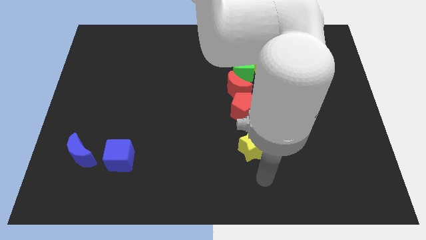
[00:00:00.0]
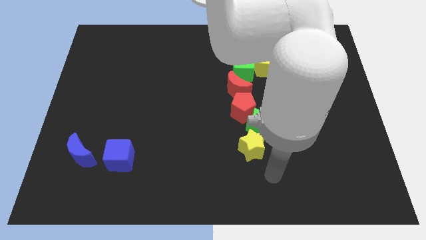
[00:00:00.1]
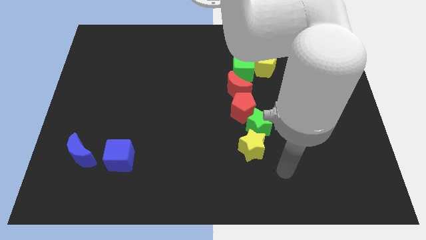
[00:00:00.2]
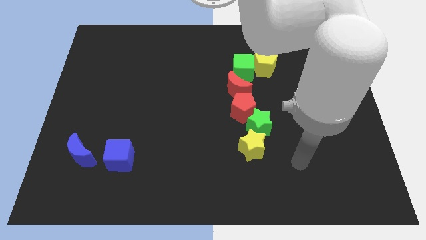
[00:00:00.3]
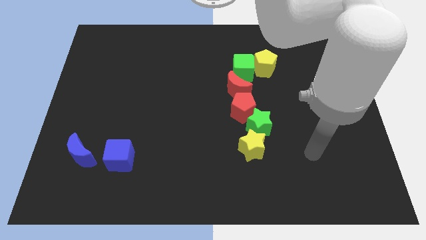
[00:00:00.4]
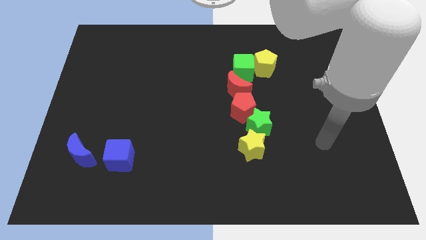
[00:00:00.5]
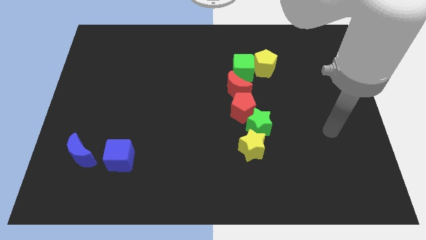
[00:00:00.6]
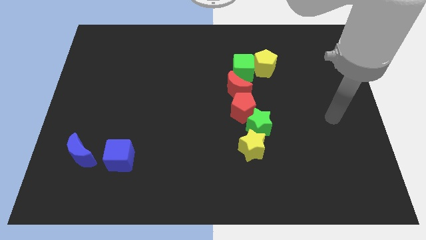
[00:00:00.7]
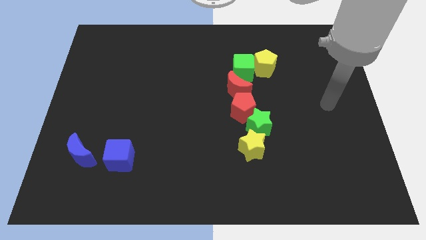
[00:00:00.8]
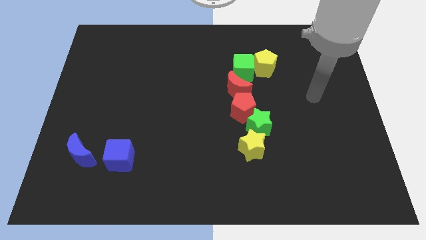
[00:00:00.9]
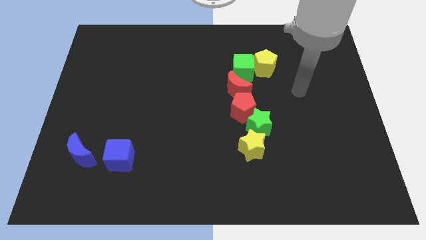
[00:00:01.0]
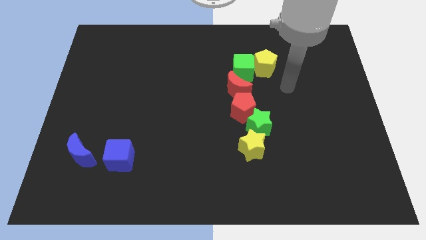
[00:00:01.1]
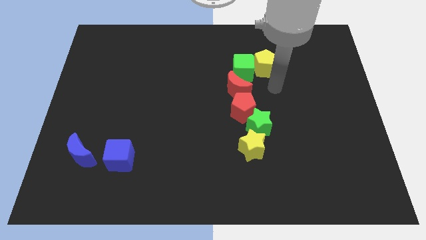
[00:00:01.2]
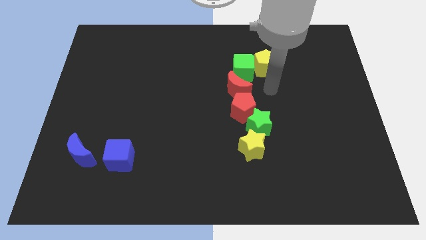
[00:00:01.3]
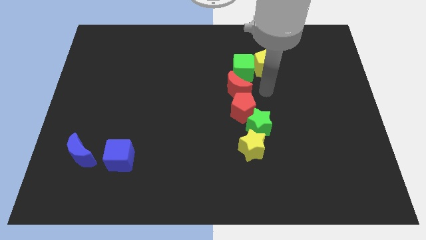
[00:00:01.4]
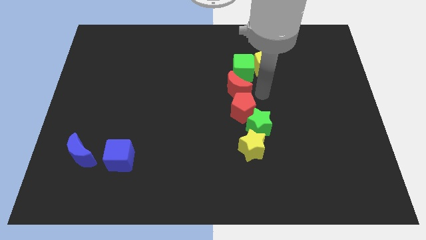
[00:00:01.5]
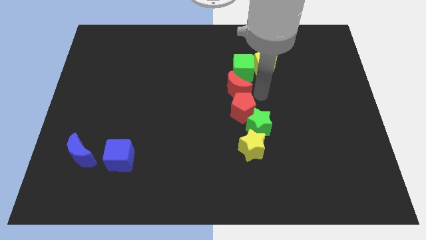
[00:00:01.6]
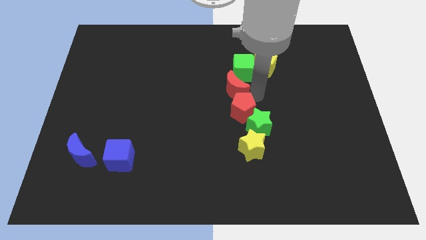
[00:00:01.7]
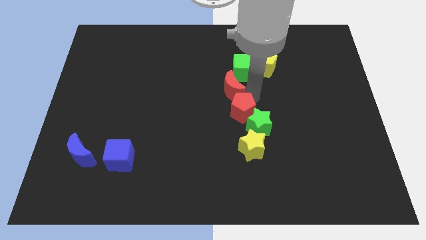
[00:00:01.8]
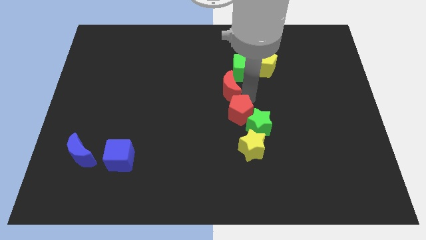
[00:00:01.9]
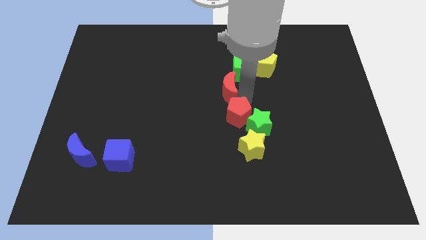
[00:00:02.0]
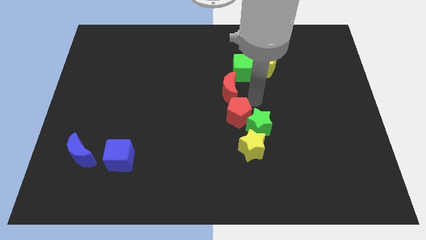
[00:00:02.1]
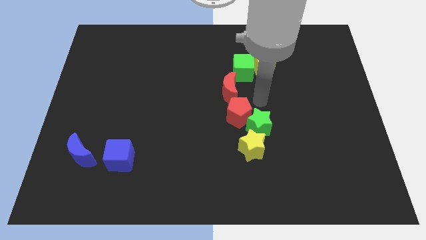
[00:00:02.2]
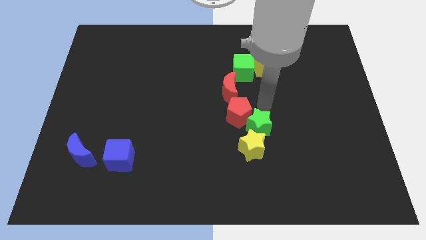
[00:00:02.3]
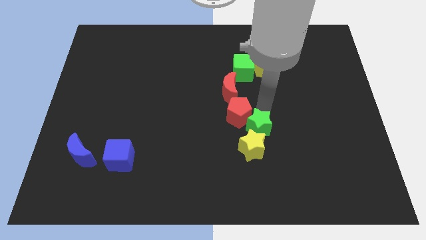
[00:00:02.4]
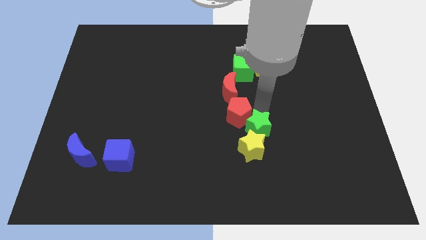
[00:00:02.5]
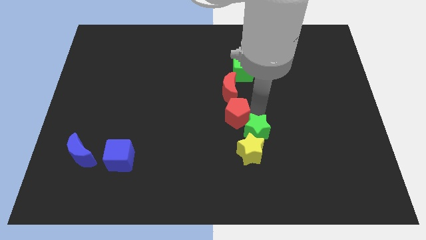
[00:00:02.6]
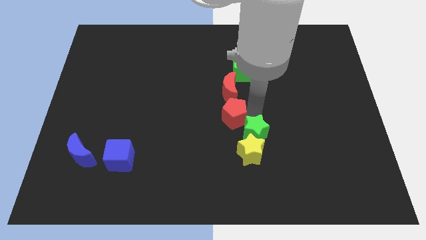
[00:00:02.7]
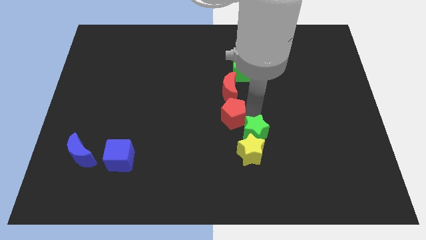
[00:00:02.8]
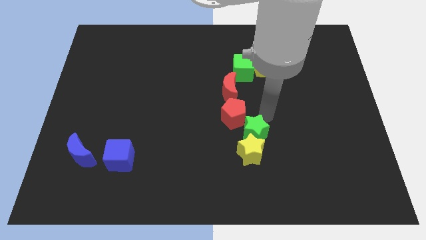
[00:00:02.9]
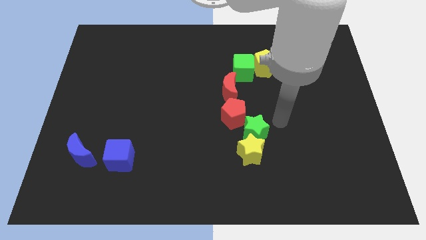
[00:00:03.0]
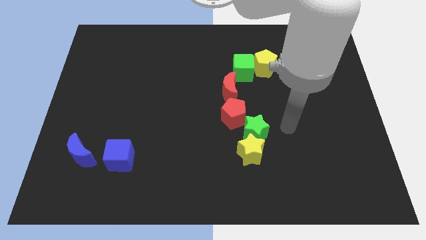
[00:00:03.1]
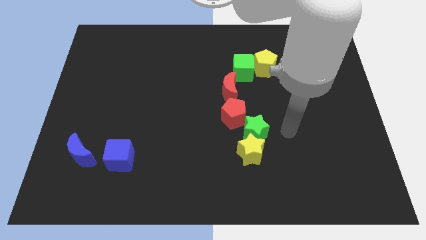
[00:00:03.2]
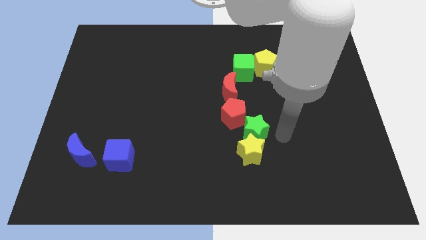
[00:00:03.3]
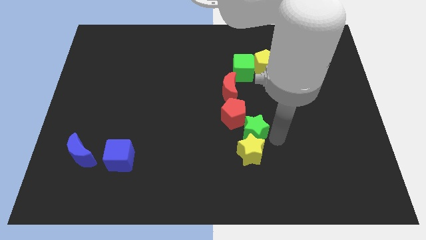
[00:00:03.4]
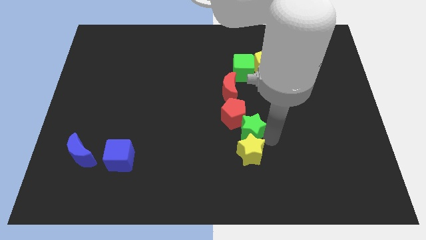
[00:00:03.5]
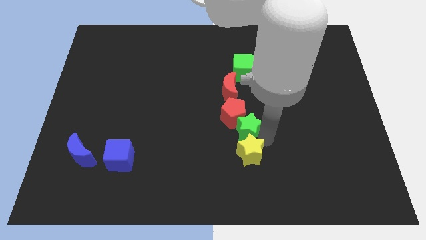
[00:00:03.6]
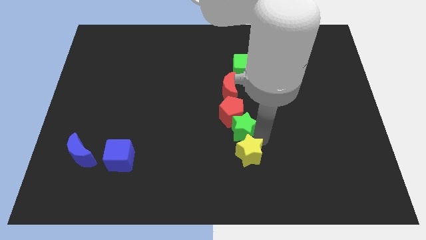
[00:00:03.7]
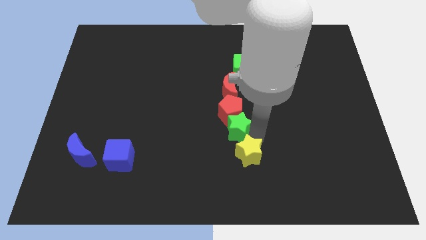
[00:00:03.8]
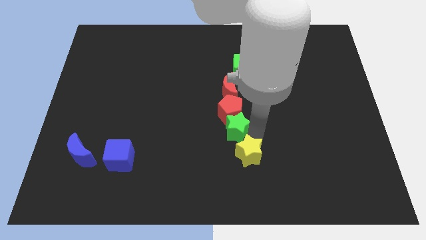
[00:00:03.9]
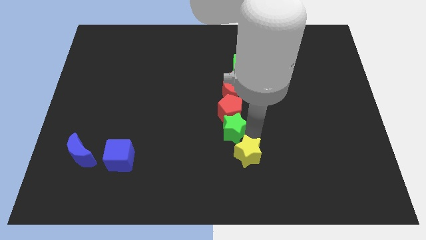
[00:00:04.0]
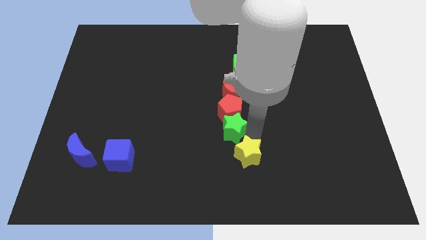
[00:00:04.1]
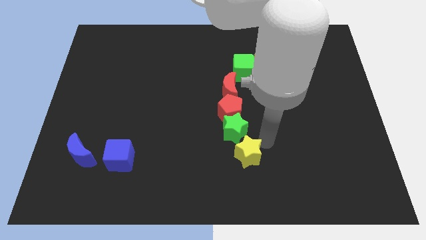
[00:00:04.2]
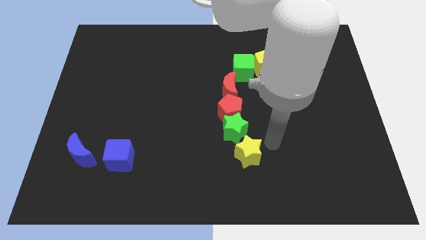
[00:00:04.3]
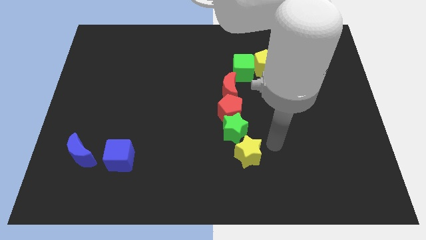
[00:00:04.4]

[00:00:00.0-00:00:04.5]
separate green star and yellow star

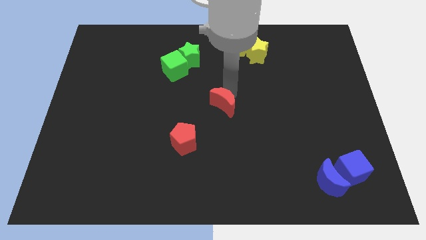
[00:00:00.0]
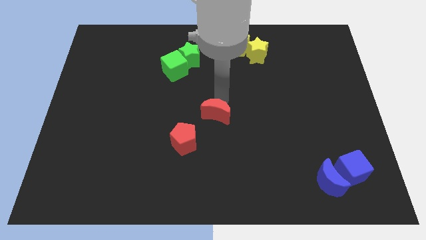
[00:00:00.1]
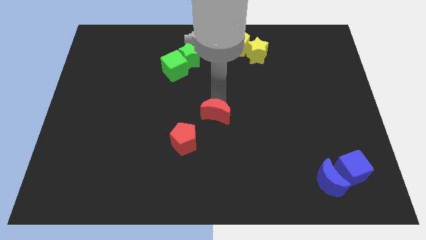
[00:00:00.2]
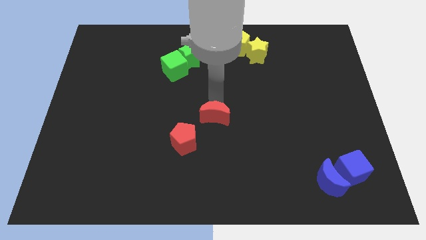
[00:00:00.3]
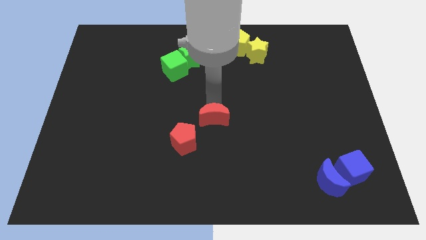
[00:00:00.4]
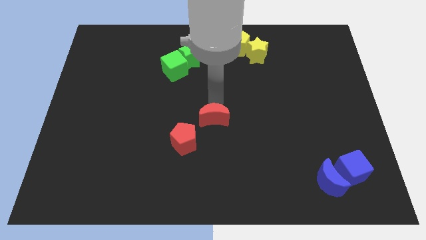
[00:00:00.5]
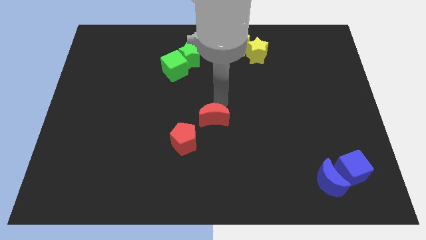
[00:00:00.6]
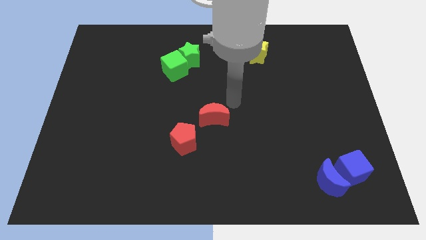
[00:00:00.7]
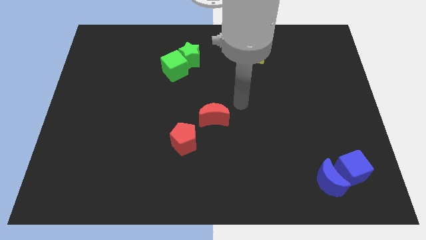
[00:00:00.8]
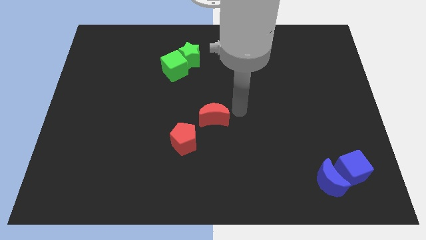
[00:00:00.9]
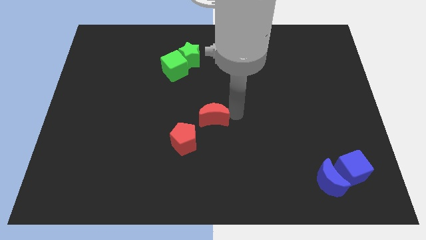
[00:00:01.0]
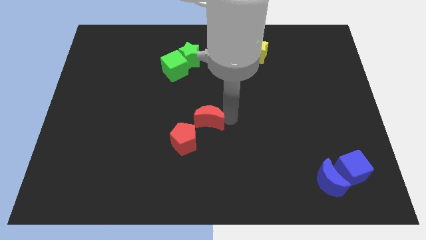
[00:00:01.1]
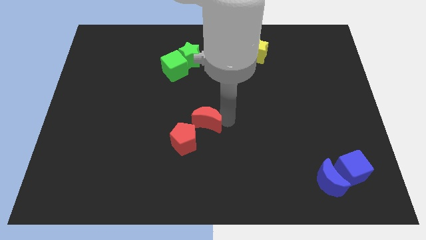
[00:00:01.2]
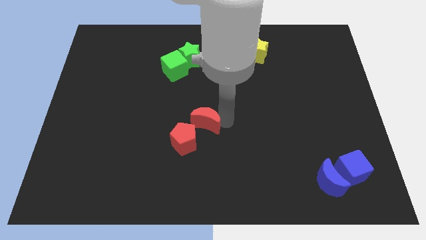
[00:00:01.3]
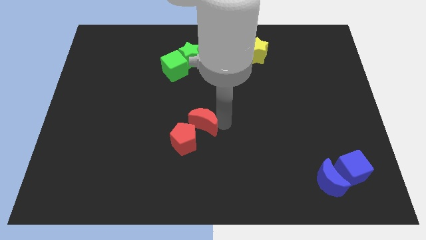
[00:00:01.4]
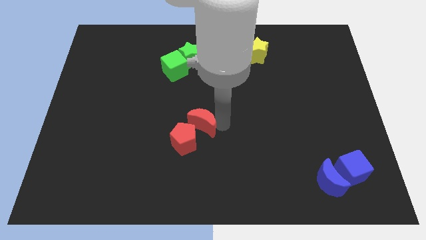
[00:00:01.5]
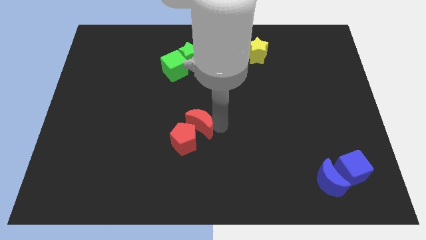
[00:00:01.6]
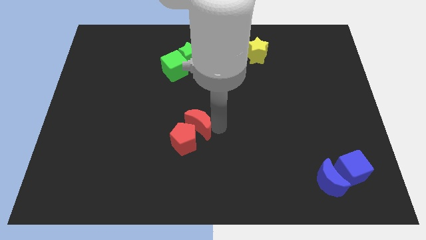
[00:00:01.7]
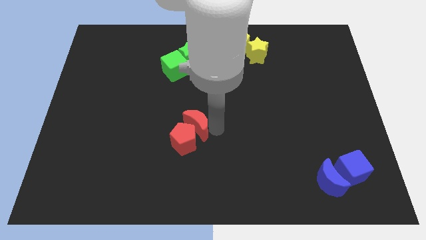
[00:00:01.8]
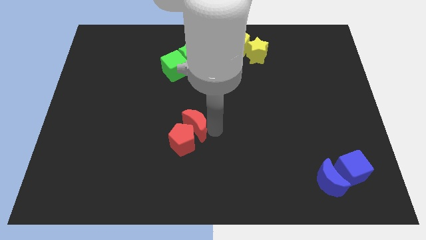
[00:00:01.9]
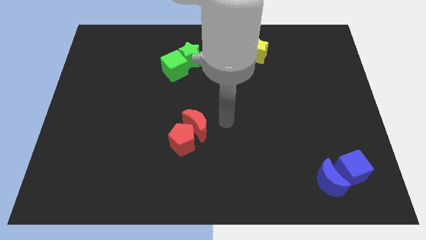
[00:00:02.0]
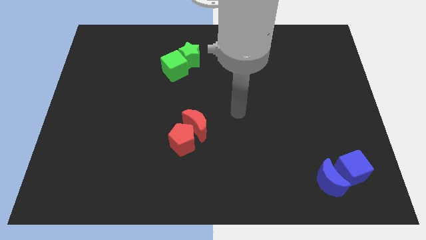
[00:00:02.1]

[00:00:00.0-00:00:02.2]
push the red moon into red pentagon diagonal right

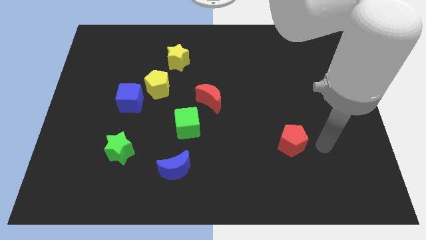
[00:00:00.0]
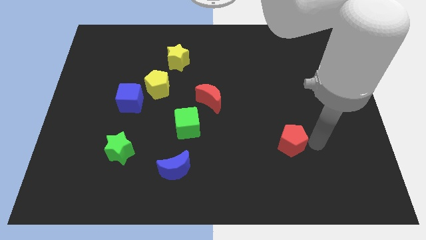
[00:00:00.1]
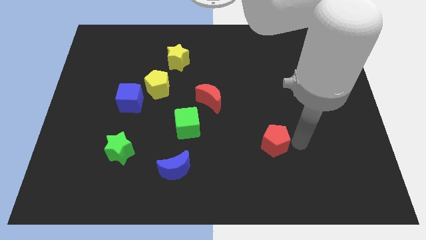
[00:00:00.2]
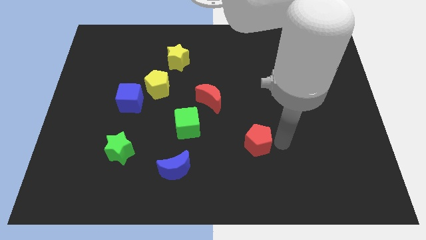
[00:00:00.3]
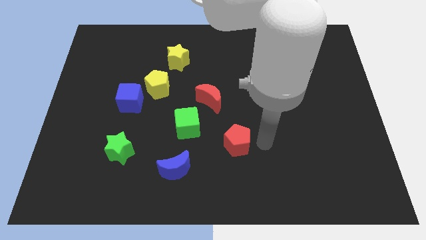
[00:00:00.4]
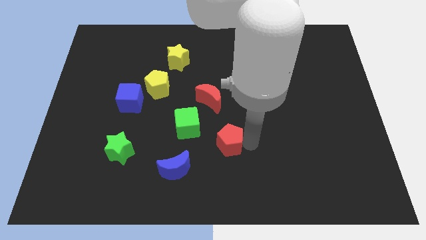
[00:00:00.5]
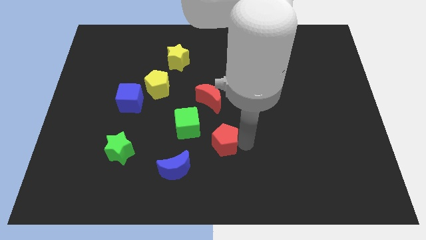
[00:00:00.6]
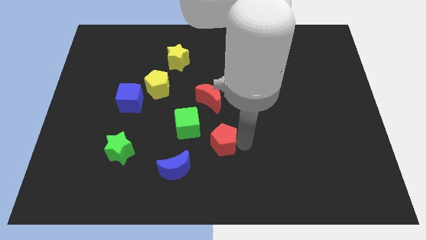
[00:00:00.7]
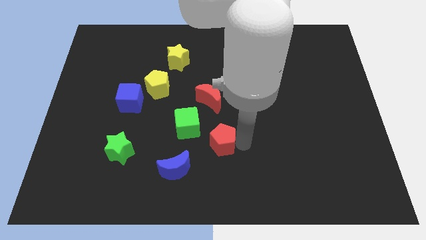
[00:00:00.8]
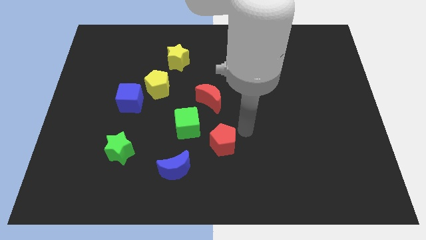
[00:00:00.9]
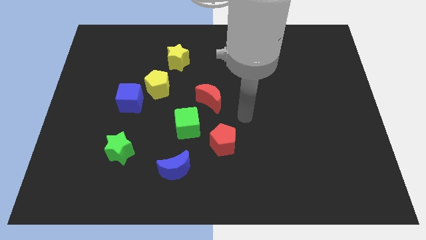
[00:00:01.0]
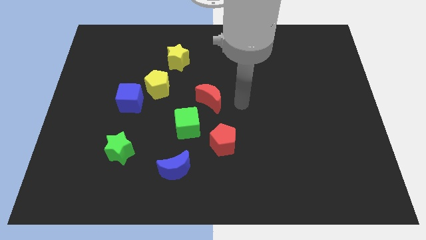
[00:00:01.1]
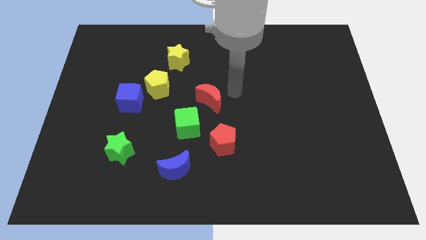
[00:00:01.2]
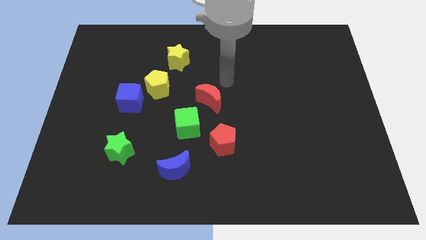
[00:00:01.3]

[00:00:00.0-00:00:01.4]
place the red pentagon vertically bottom to the red crescent

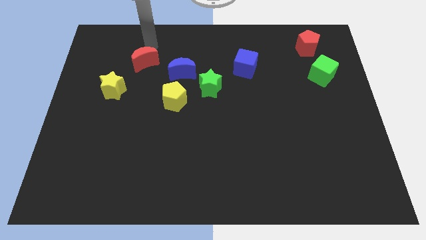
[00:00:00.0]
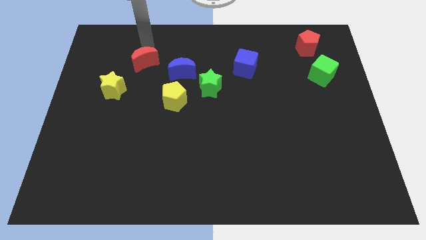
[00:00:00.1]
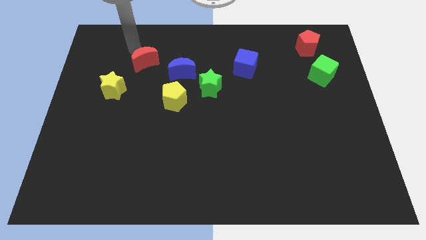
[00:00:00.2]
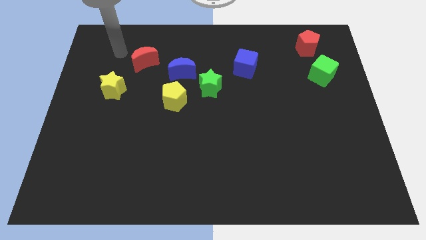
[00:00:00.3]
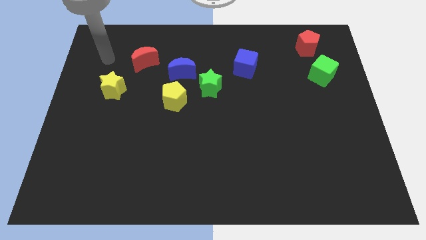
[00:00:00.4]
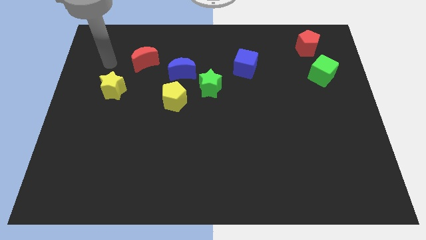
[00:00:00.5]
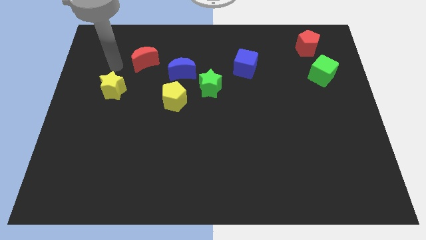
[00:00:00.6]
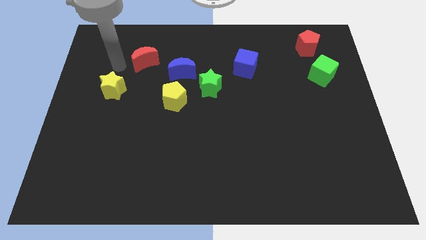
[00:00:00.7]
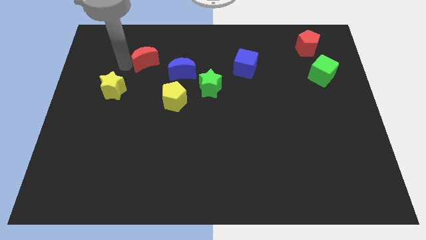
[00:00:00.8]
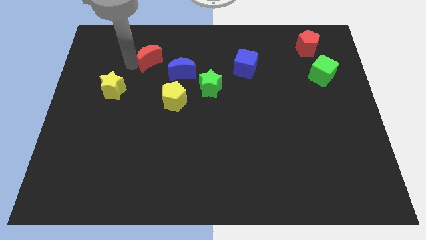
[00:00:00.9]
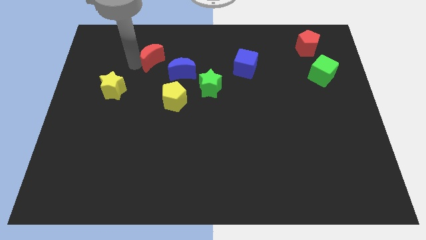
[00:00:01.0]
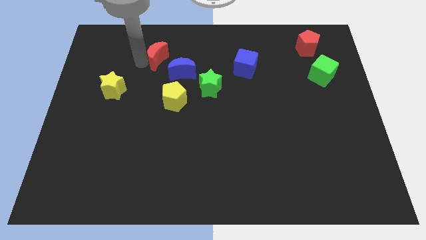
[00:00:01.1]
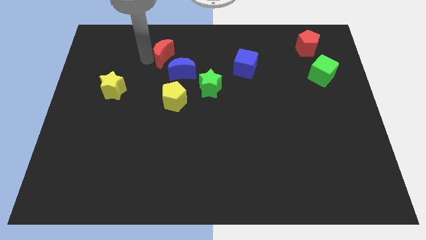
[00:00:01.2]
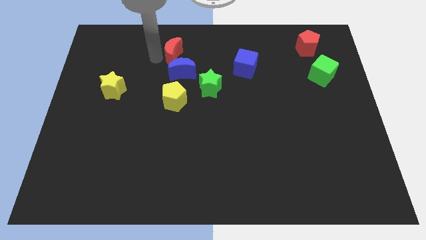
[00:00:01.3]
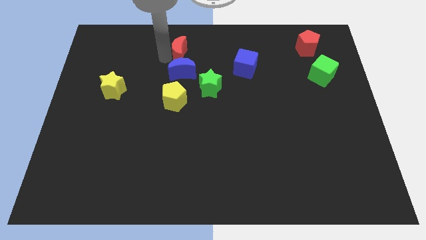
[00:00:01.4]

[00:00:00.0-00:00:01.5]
push red moon above blue moon
